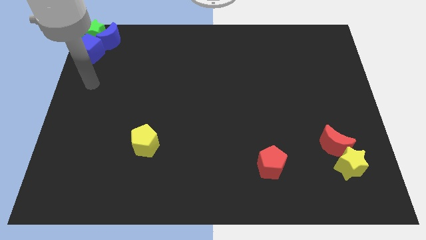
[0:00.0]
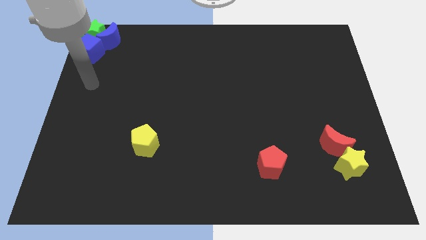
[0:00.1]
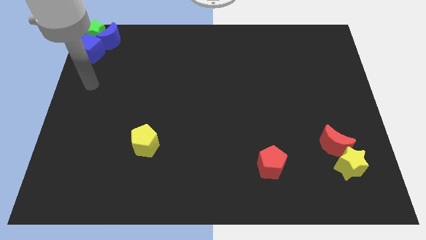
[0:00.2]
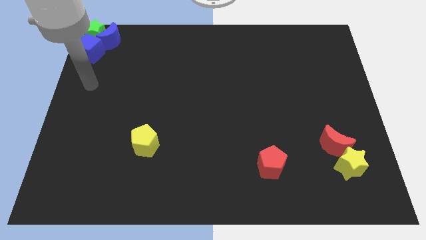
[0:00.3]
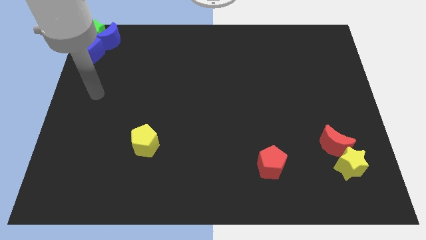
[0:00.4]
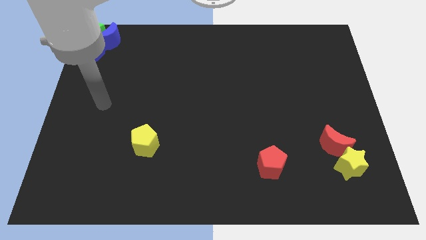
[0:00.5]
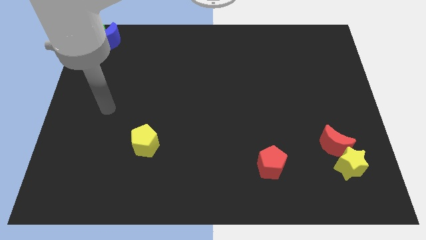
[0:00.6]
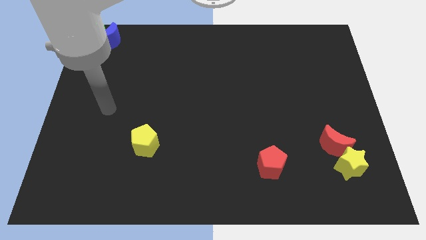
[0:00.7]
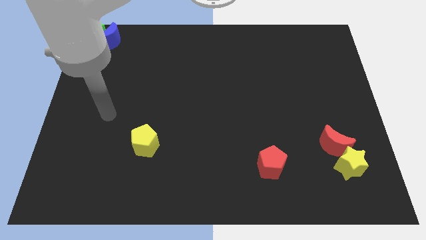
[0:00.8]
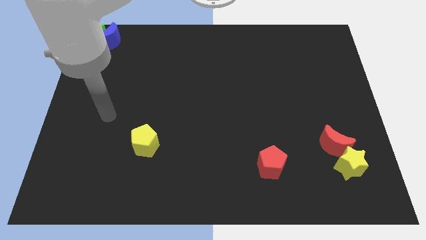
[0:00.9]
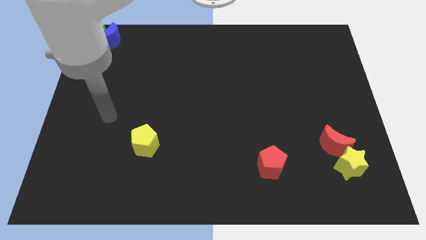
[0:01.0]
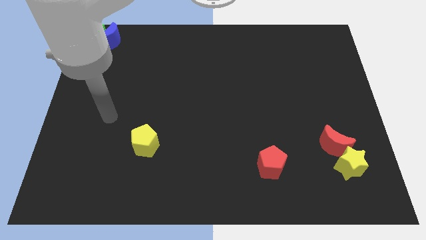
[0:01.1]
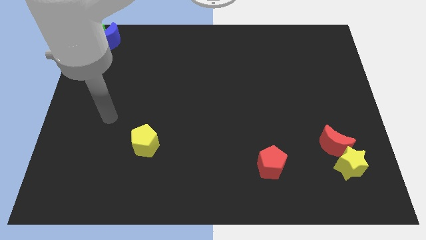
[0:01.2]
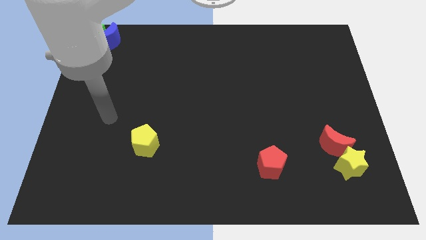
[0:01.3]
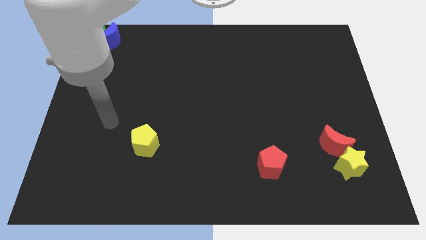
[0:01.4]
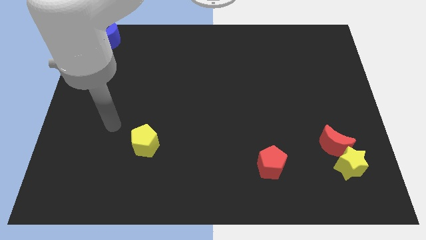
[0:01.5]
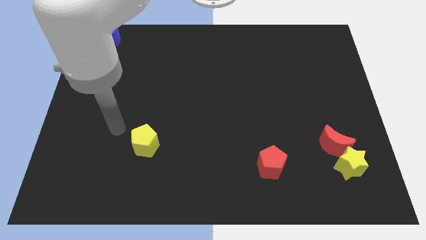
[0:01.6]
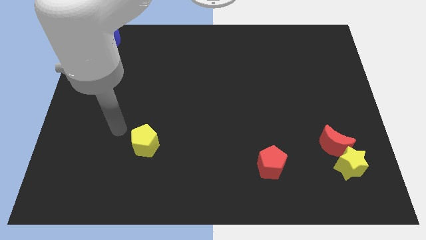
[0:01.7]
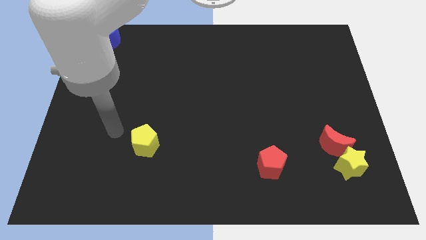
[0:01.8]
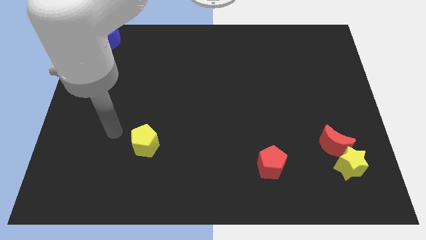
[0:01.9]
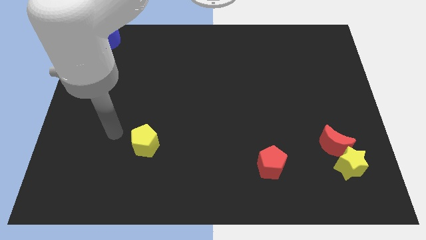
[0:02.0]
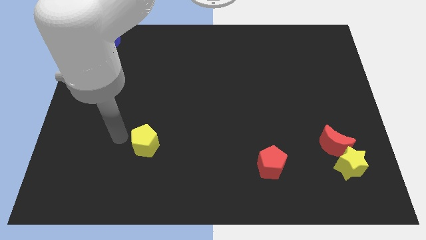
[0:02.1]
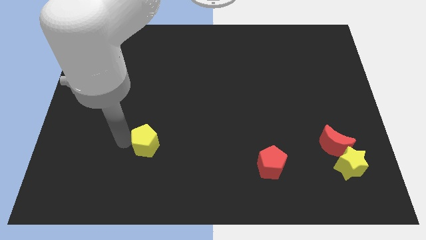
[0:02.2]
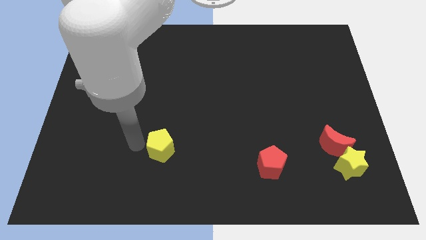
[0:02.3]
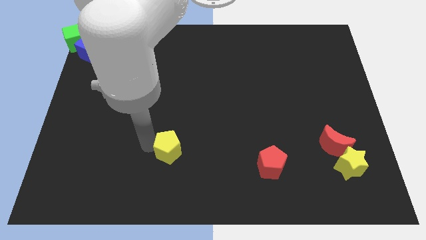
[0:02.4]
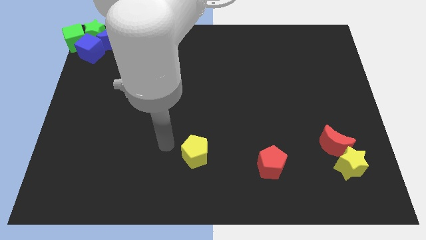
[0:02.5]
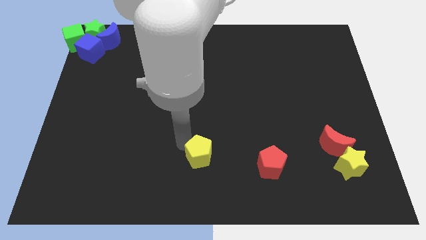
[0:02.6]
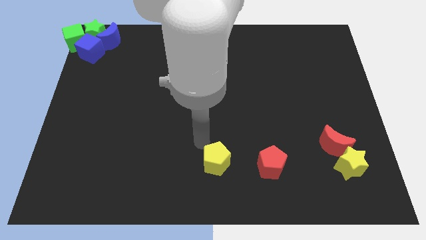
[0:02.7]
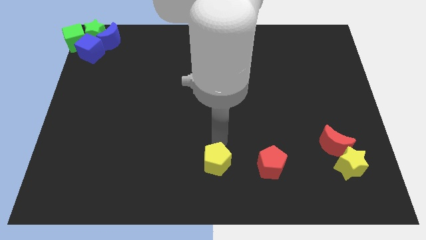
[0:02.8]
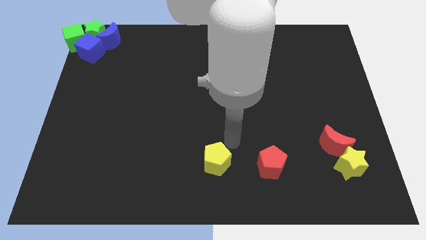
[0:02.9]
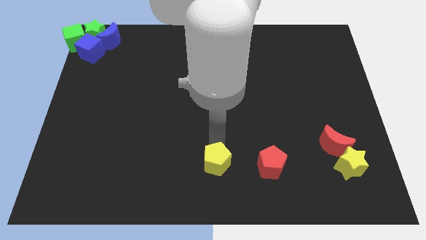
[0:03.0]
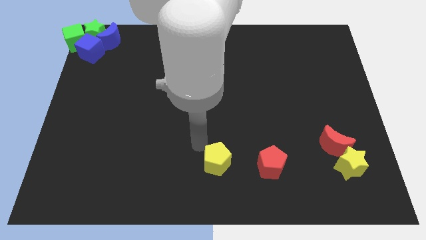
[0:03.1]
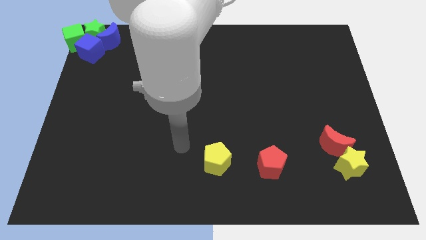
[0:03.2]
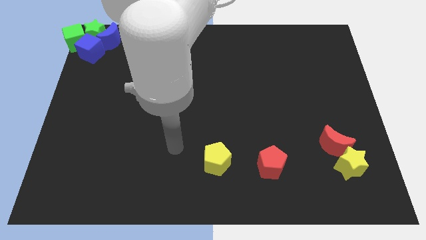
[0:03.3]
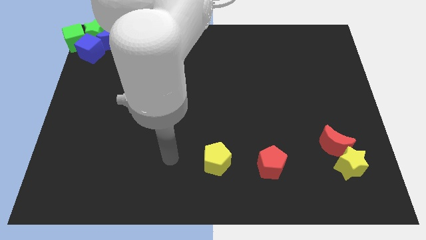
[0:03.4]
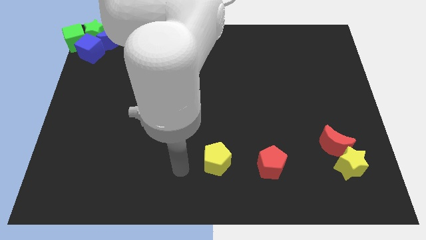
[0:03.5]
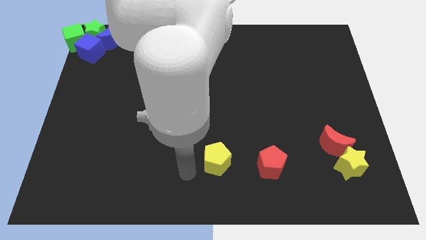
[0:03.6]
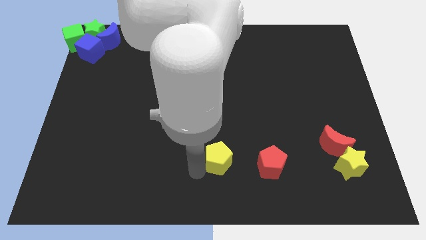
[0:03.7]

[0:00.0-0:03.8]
push the yellow pentagon to the left side of the red pentagon

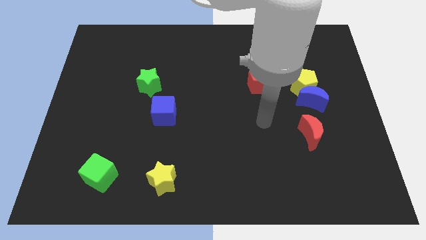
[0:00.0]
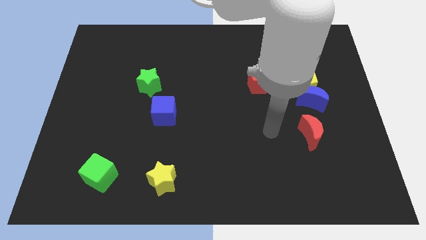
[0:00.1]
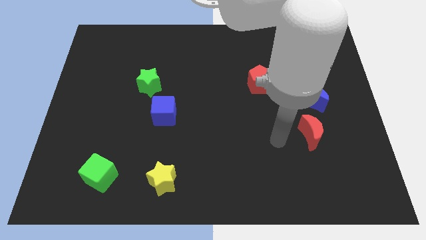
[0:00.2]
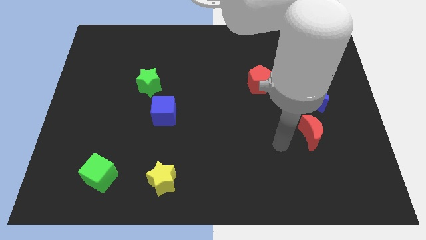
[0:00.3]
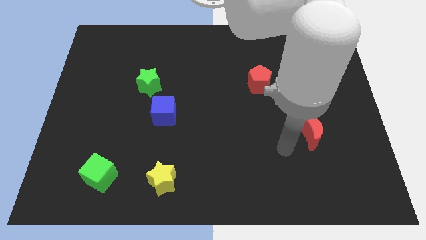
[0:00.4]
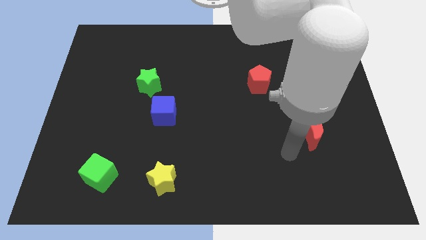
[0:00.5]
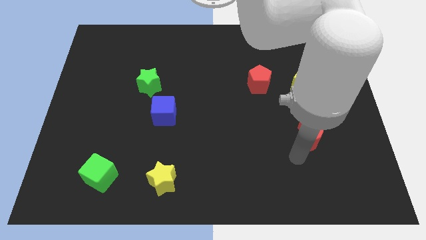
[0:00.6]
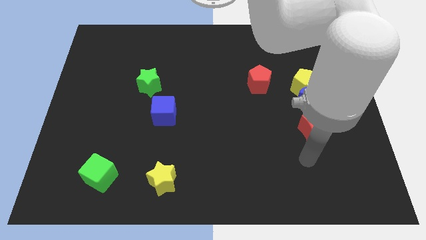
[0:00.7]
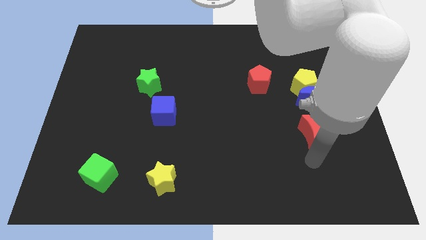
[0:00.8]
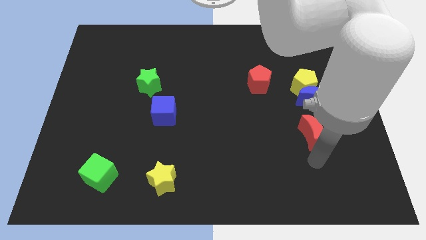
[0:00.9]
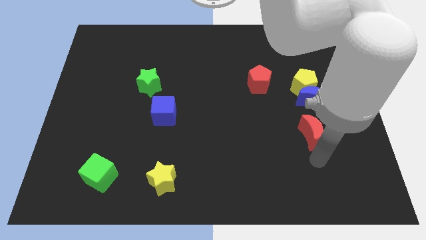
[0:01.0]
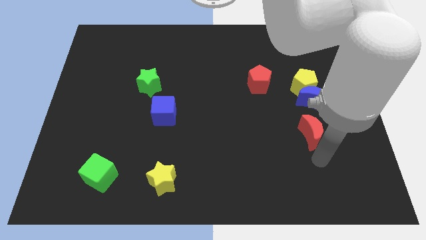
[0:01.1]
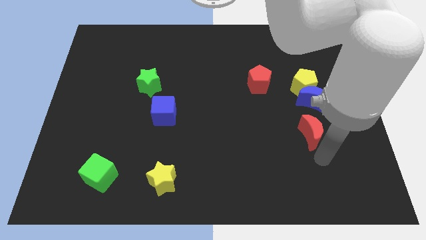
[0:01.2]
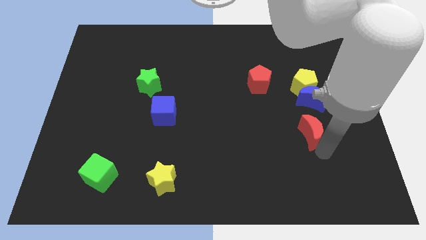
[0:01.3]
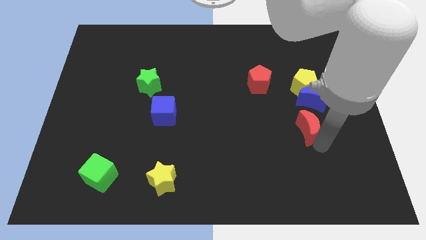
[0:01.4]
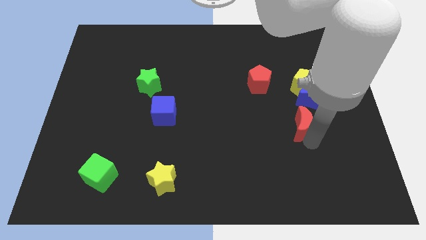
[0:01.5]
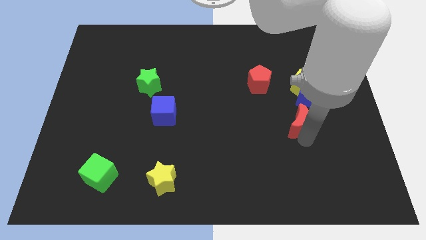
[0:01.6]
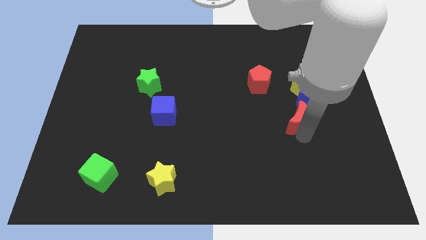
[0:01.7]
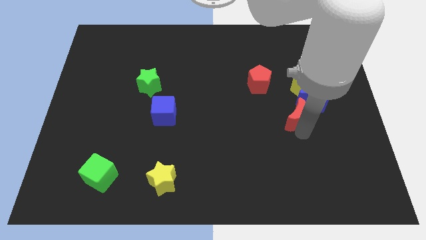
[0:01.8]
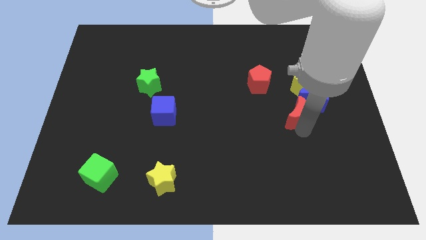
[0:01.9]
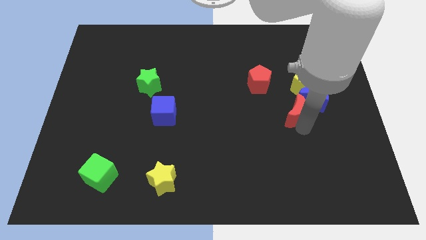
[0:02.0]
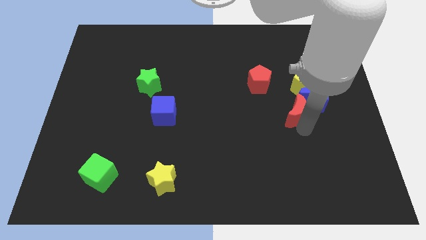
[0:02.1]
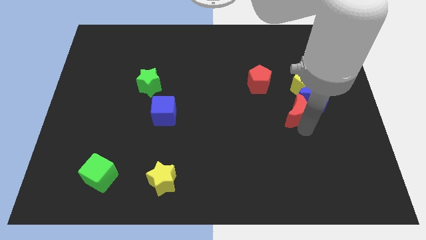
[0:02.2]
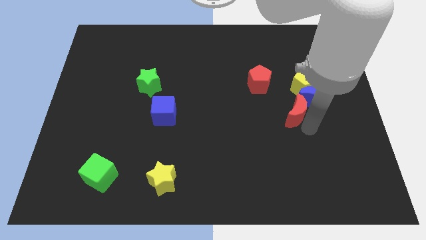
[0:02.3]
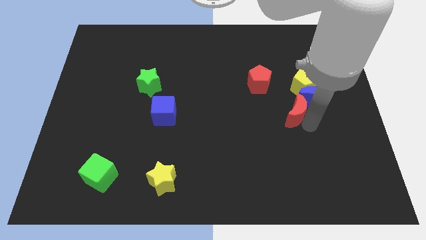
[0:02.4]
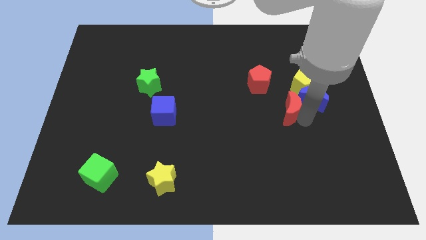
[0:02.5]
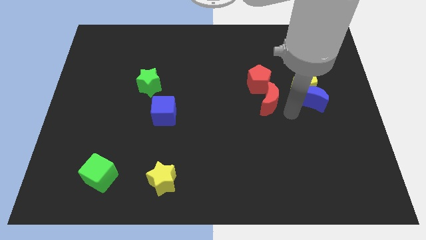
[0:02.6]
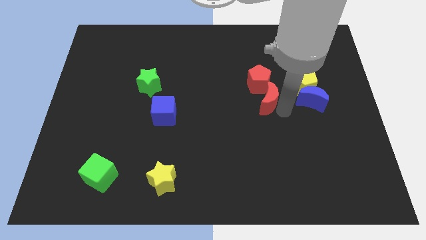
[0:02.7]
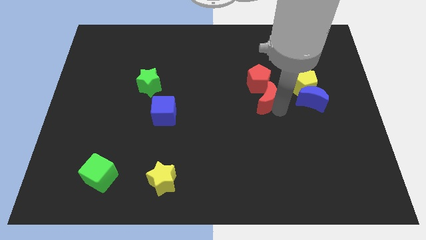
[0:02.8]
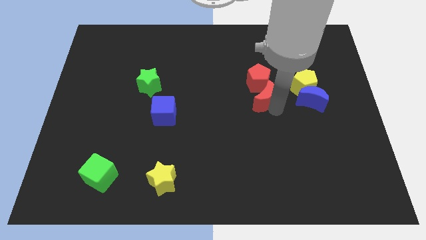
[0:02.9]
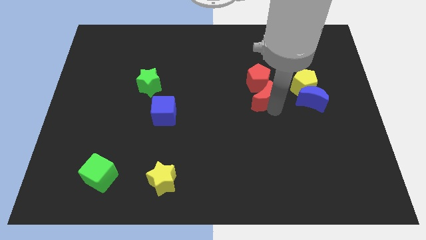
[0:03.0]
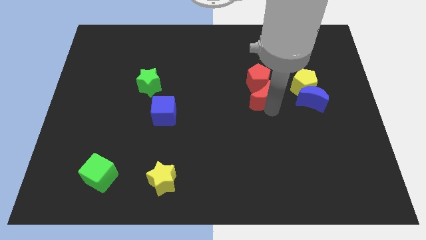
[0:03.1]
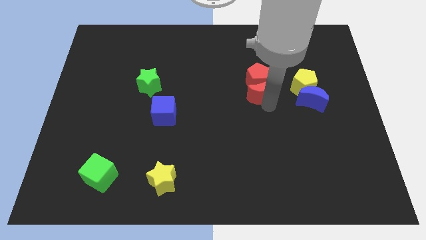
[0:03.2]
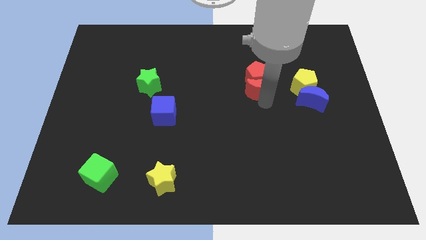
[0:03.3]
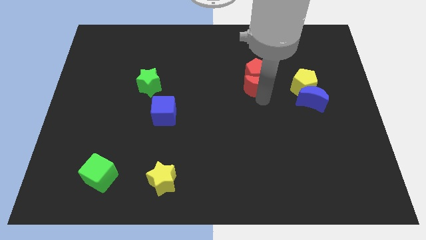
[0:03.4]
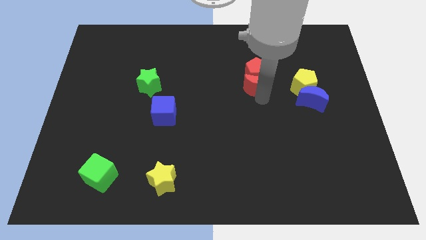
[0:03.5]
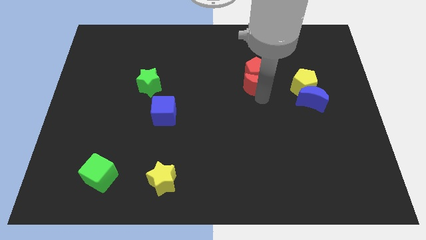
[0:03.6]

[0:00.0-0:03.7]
place the red moon into the red pentagon

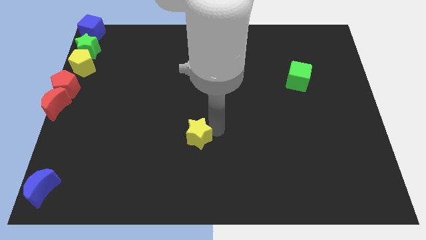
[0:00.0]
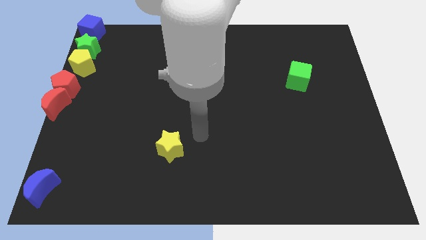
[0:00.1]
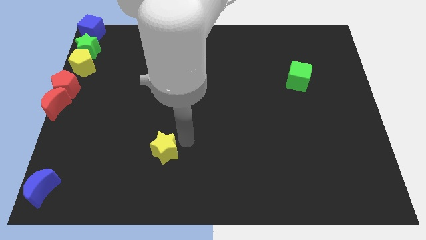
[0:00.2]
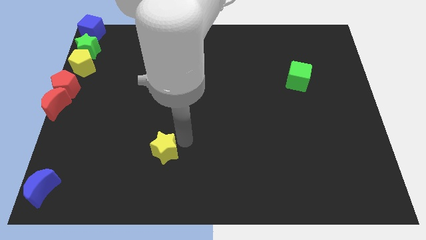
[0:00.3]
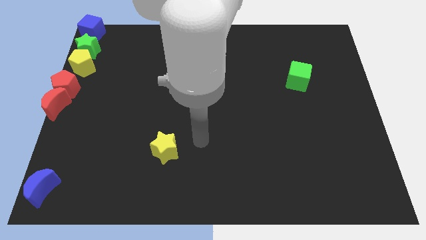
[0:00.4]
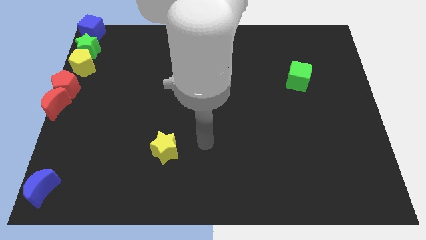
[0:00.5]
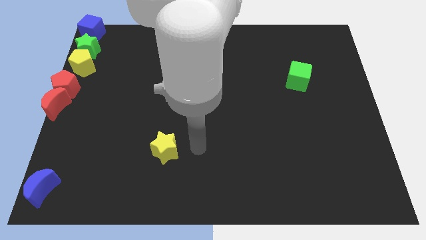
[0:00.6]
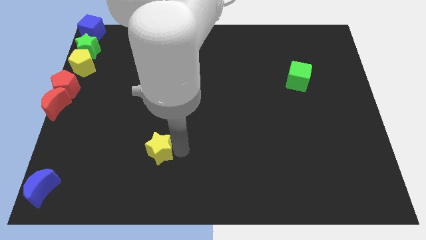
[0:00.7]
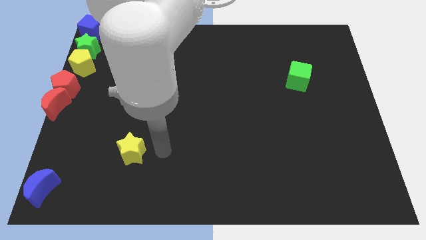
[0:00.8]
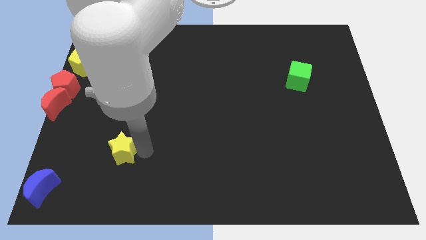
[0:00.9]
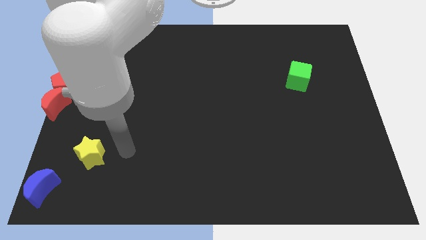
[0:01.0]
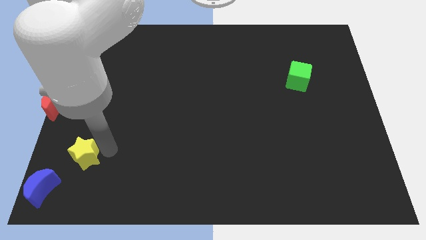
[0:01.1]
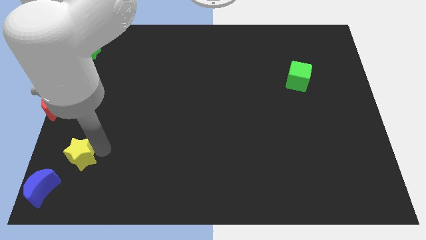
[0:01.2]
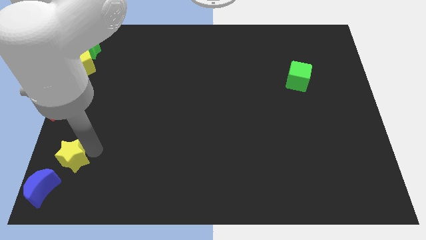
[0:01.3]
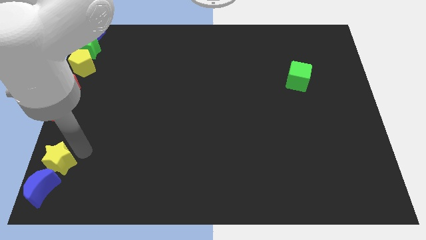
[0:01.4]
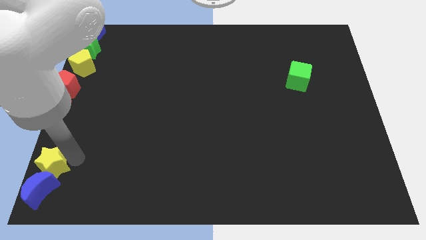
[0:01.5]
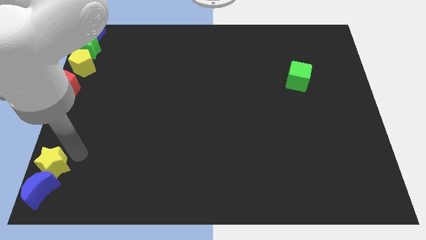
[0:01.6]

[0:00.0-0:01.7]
move the yellow star towards the bottom left
